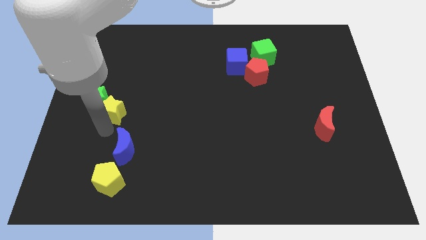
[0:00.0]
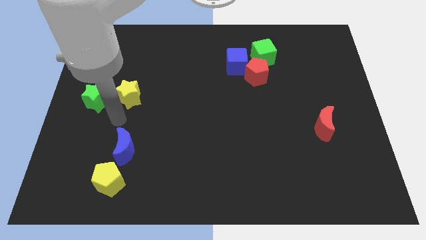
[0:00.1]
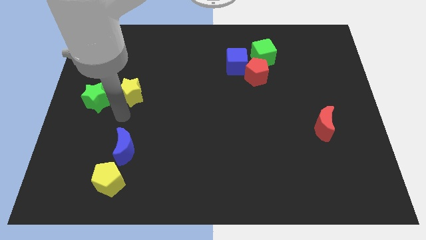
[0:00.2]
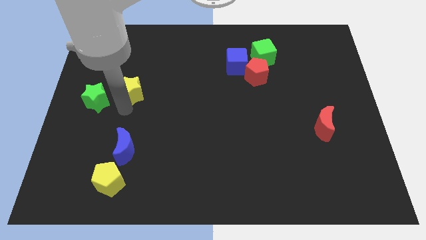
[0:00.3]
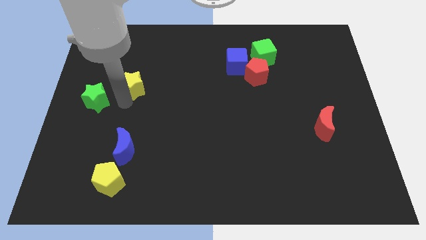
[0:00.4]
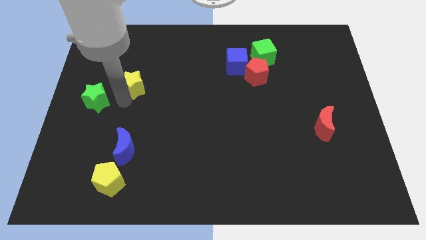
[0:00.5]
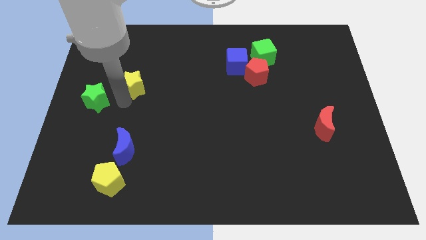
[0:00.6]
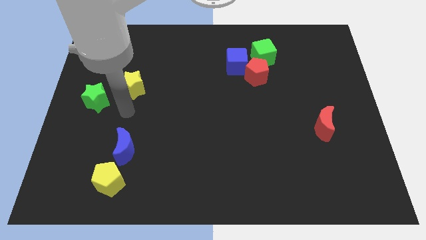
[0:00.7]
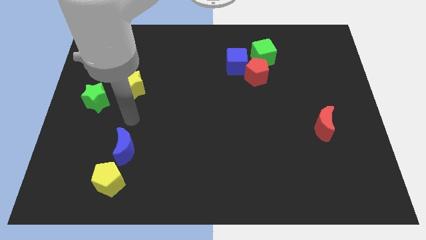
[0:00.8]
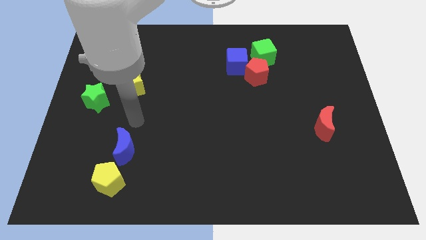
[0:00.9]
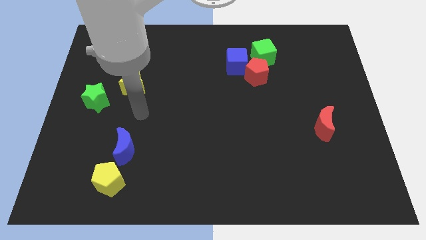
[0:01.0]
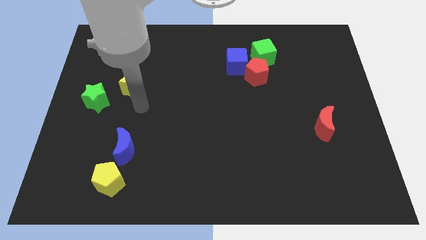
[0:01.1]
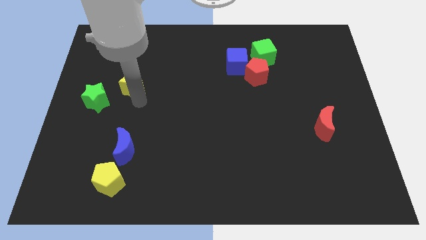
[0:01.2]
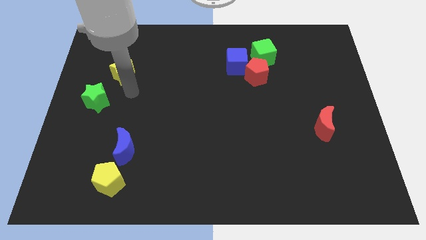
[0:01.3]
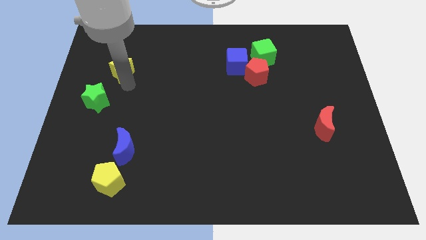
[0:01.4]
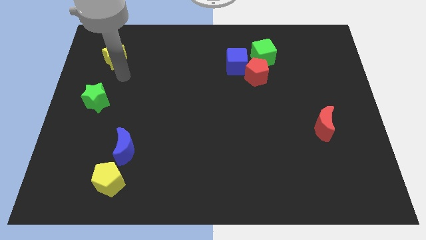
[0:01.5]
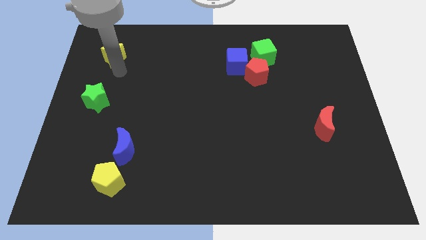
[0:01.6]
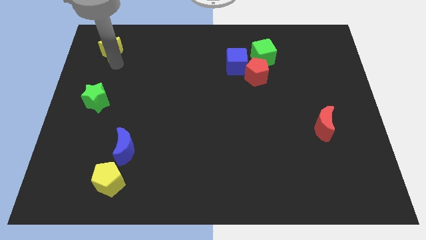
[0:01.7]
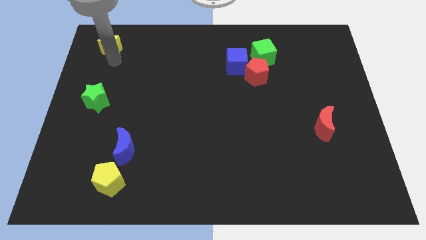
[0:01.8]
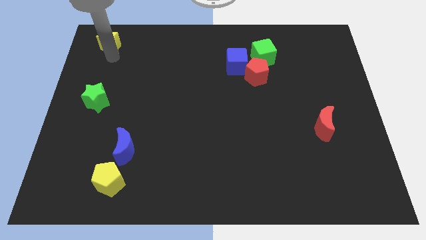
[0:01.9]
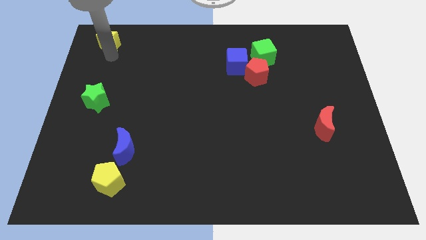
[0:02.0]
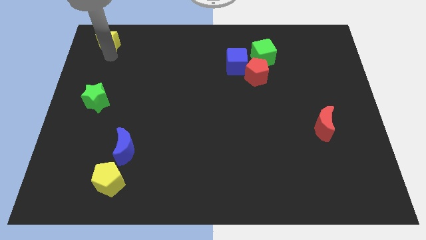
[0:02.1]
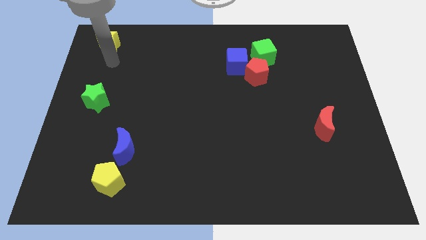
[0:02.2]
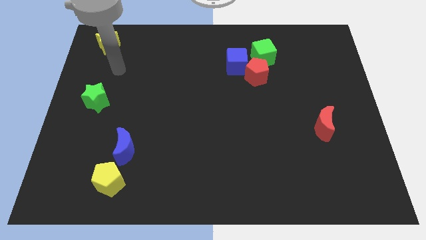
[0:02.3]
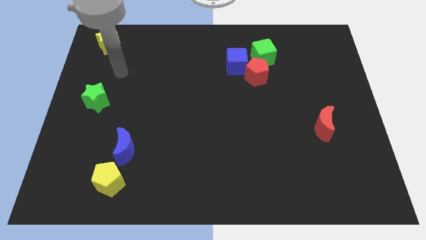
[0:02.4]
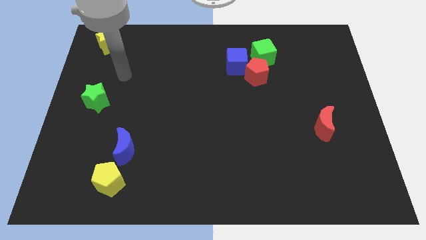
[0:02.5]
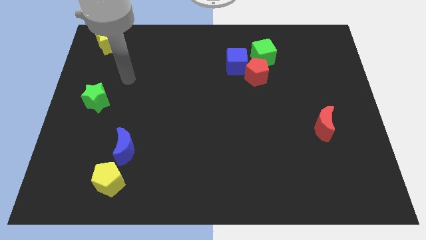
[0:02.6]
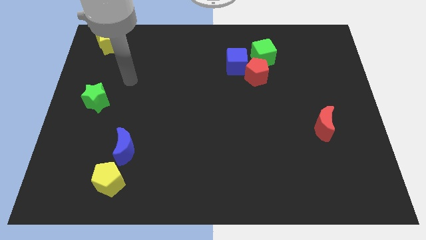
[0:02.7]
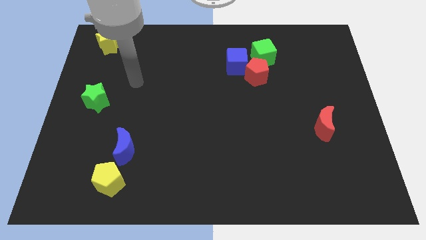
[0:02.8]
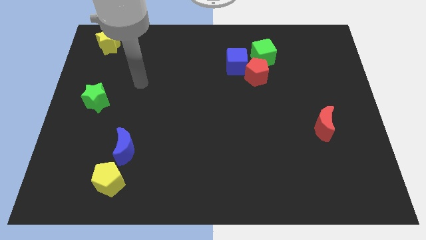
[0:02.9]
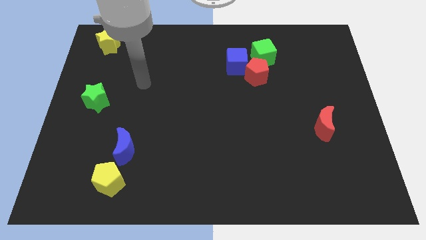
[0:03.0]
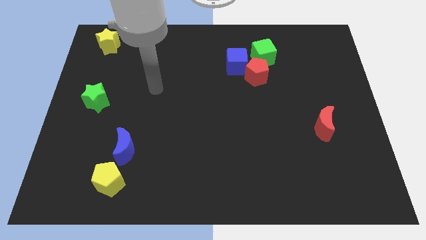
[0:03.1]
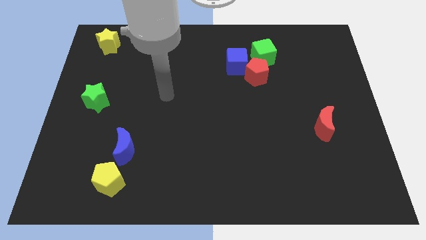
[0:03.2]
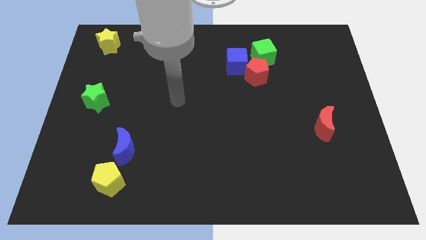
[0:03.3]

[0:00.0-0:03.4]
move the yellow star towards the top left side of the board

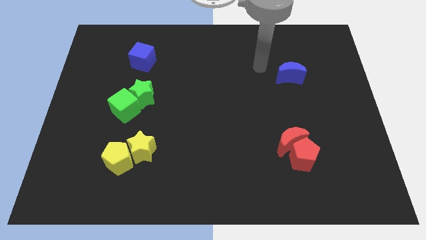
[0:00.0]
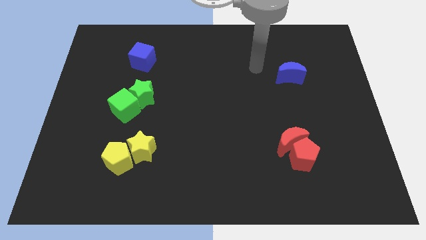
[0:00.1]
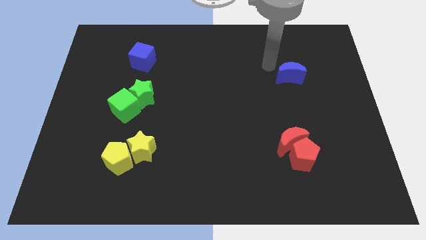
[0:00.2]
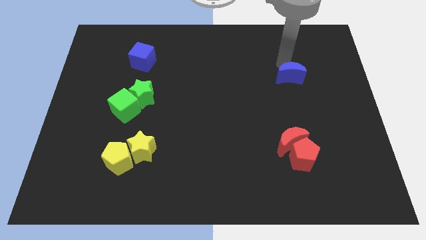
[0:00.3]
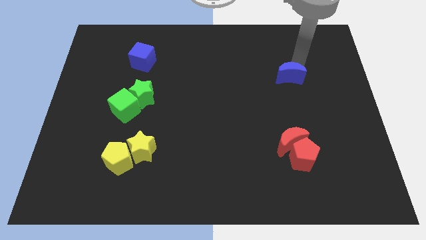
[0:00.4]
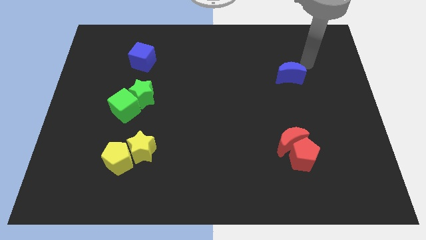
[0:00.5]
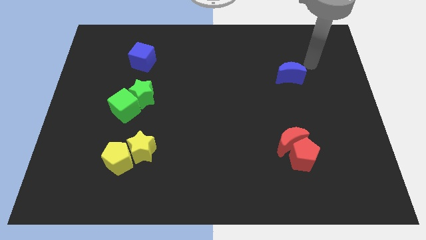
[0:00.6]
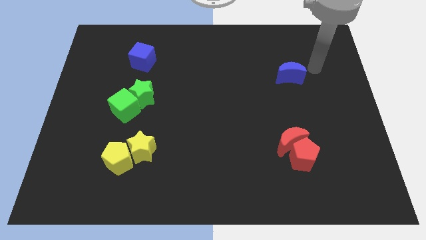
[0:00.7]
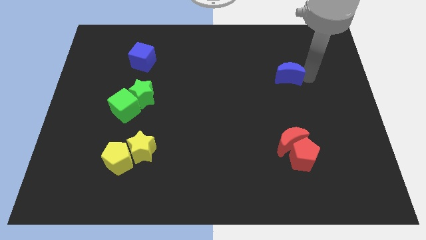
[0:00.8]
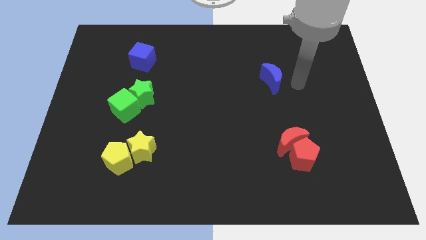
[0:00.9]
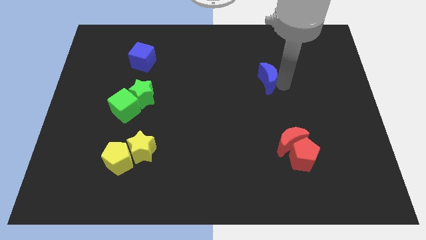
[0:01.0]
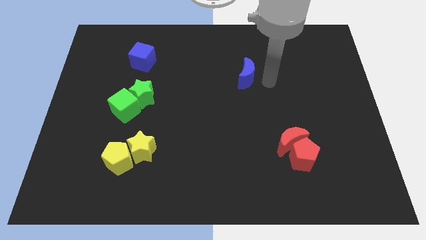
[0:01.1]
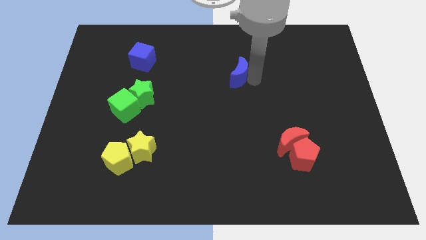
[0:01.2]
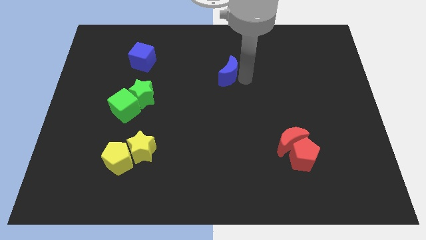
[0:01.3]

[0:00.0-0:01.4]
move the blue moon towards the blue cube

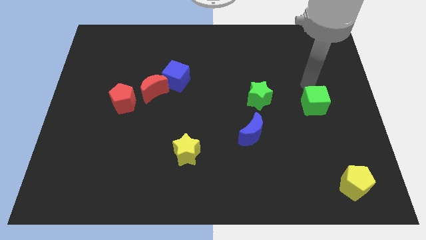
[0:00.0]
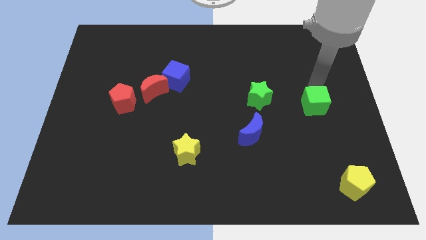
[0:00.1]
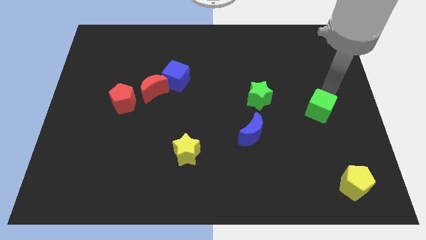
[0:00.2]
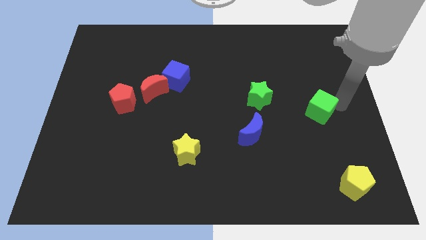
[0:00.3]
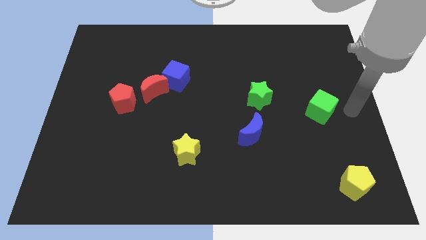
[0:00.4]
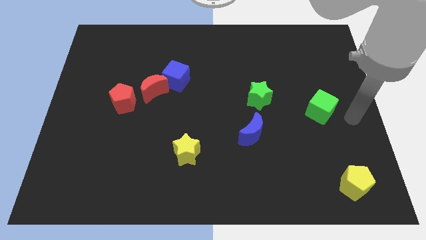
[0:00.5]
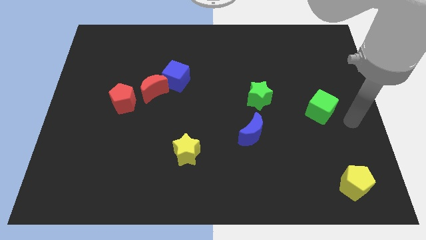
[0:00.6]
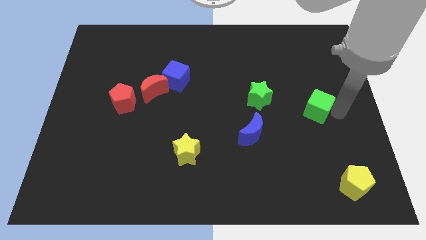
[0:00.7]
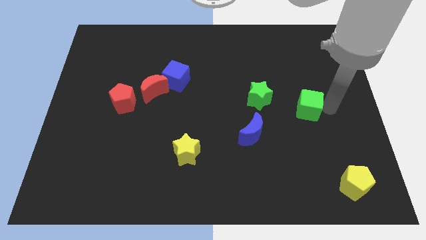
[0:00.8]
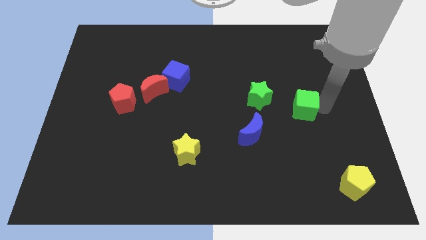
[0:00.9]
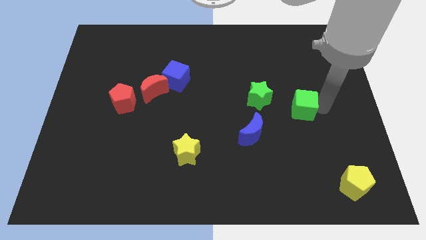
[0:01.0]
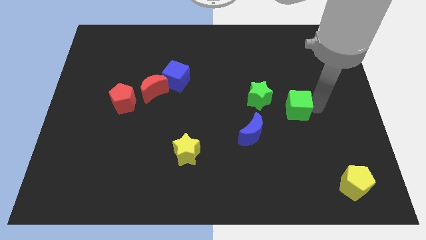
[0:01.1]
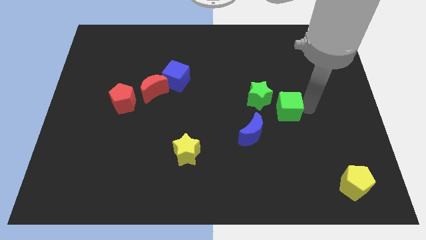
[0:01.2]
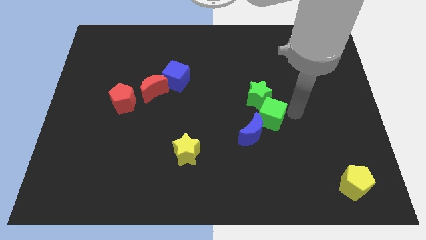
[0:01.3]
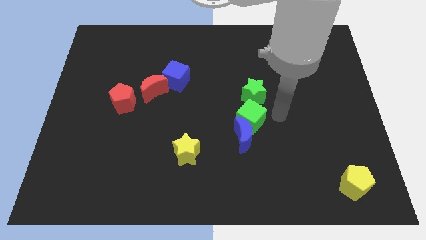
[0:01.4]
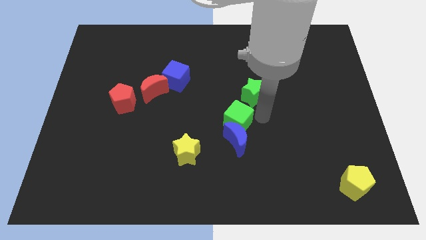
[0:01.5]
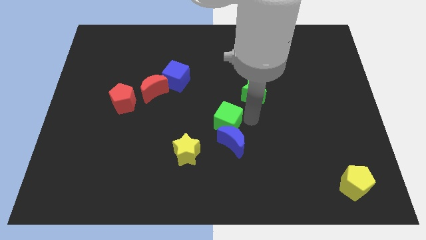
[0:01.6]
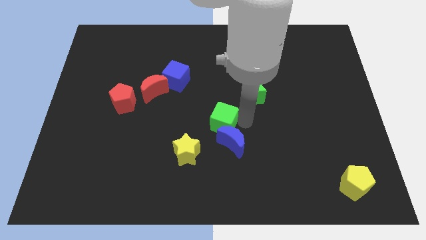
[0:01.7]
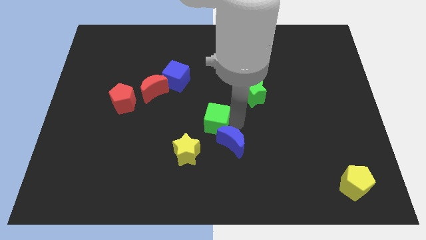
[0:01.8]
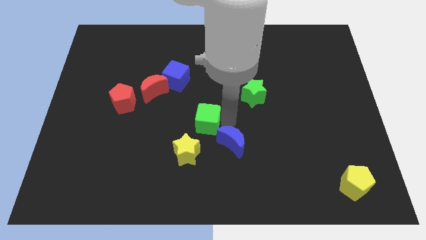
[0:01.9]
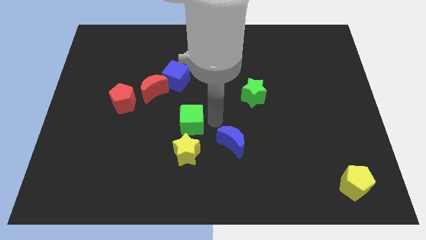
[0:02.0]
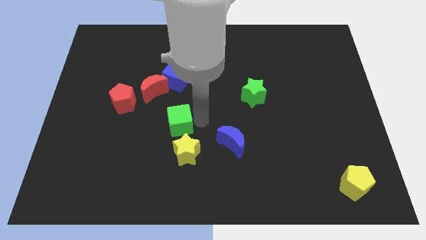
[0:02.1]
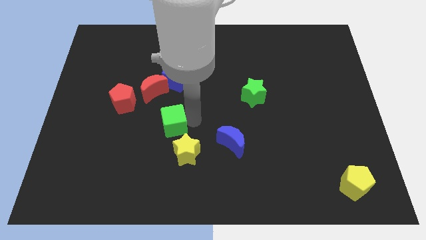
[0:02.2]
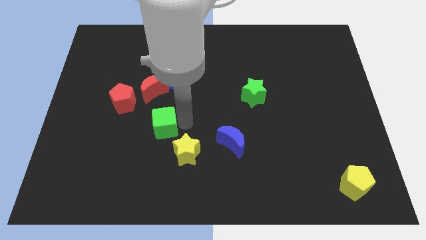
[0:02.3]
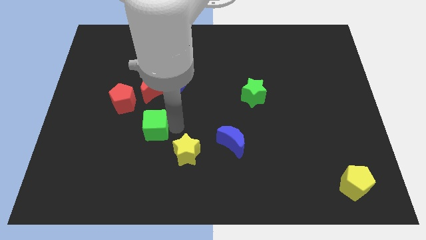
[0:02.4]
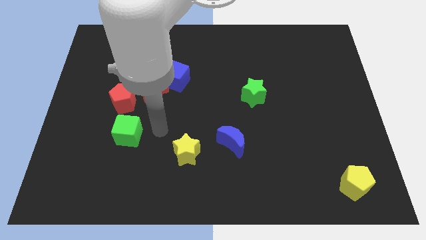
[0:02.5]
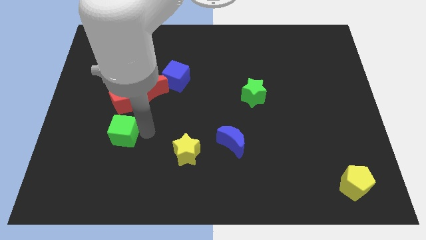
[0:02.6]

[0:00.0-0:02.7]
push the green cube below the red pentagon

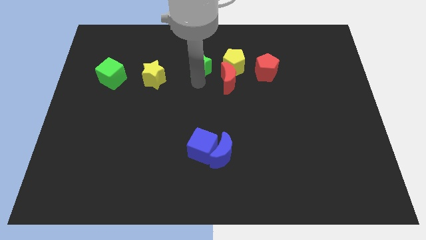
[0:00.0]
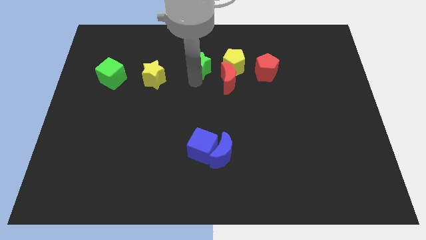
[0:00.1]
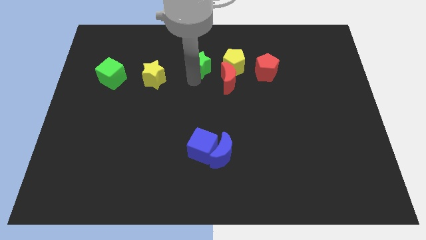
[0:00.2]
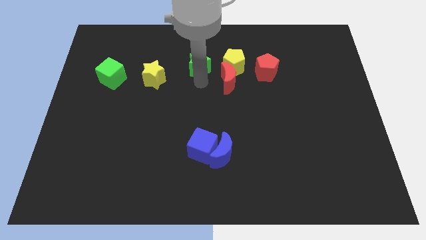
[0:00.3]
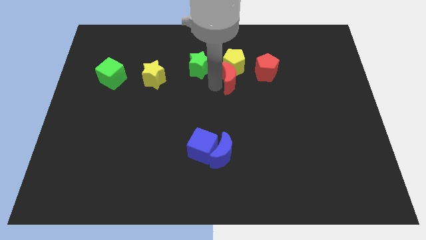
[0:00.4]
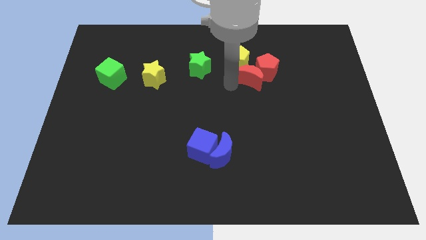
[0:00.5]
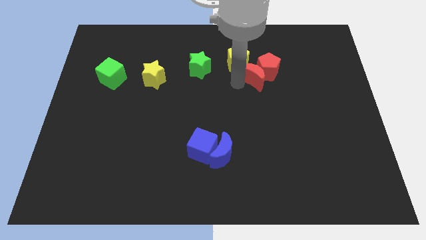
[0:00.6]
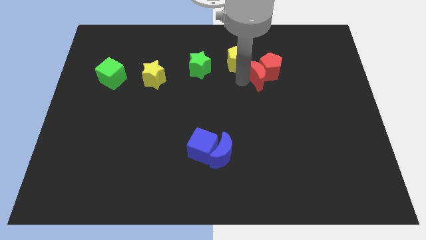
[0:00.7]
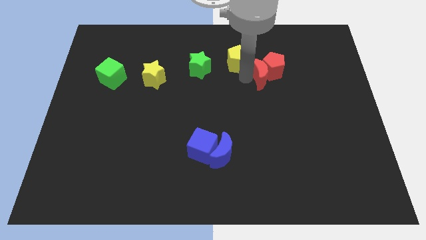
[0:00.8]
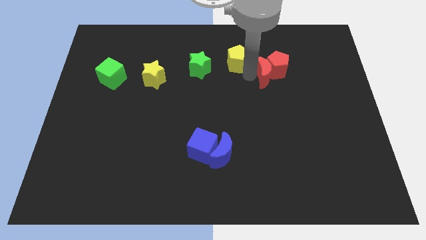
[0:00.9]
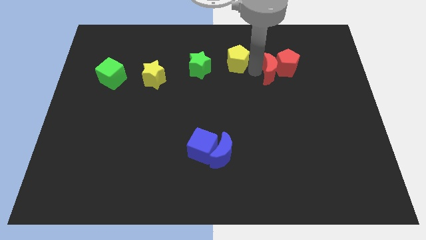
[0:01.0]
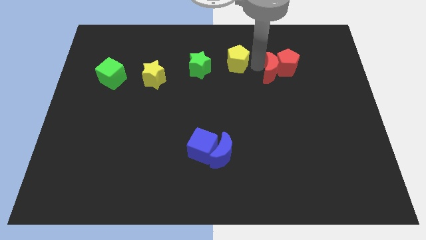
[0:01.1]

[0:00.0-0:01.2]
push the red moon into the red pentagon

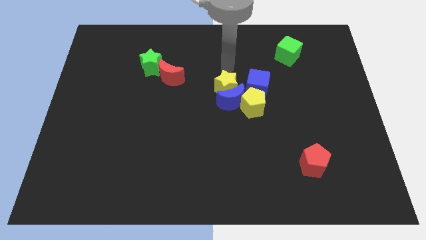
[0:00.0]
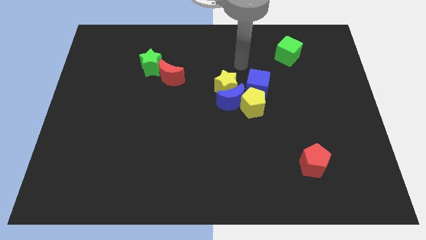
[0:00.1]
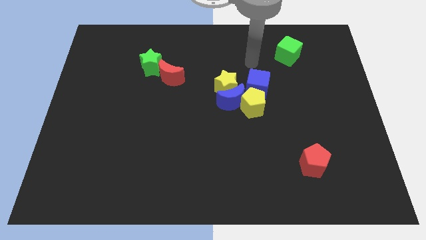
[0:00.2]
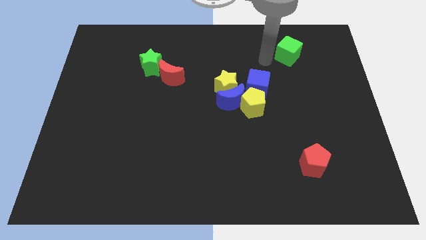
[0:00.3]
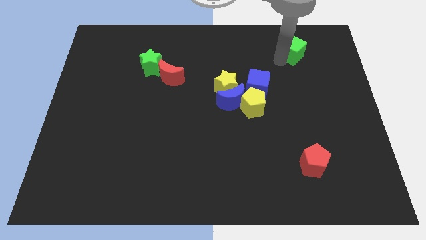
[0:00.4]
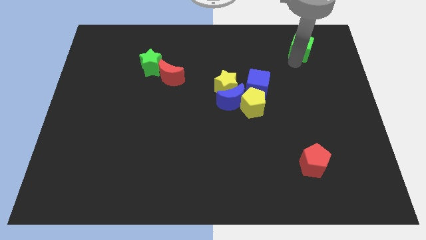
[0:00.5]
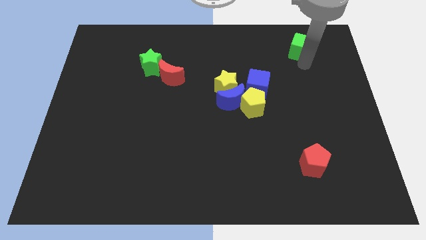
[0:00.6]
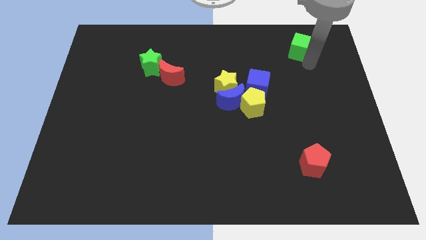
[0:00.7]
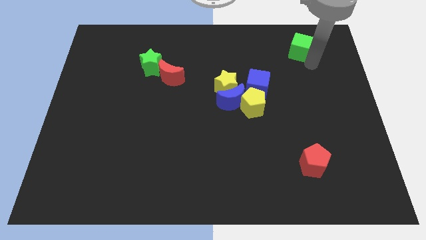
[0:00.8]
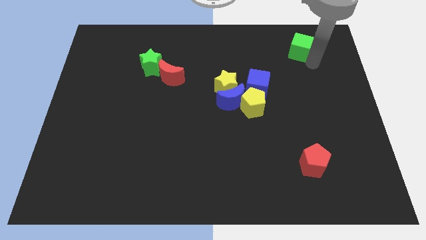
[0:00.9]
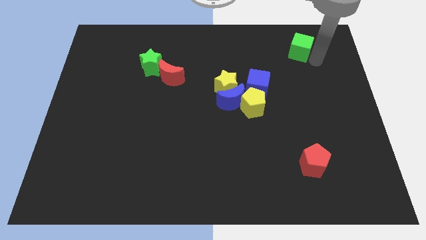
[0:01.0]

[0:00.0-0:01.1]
place the green cube parallel above the red pentagon
